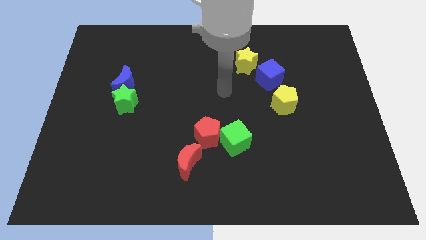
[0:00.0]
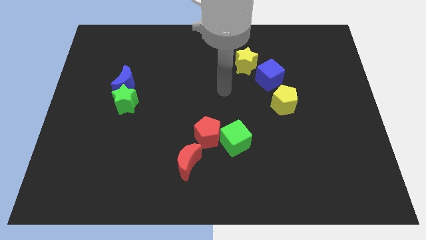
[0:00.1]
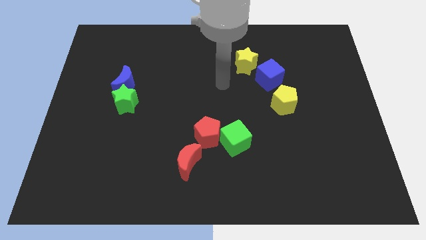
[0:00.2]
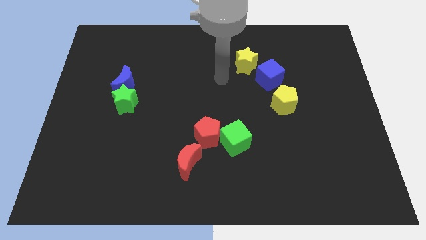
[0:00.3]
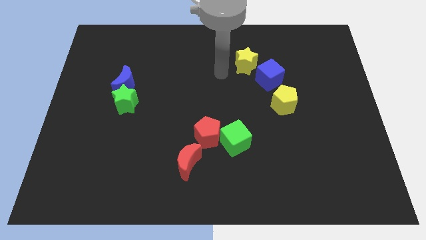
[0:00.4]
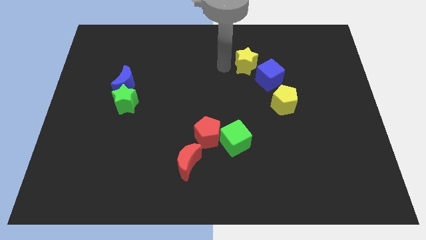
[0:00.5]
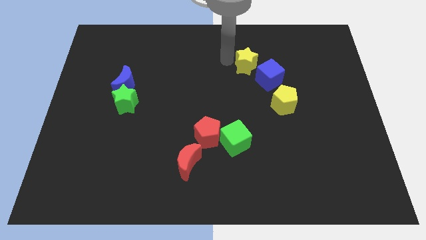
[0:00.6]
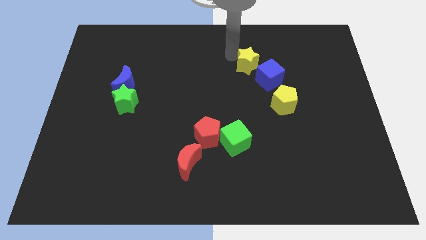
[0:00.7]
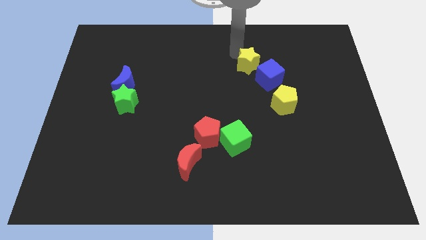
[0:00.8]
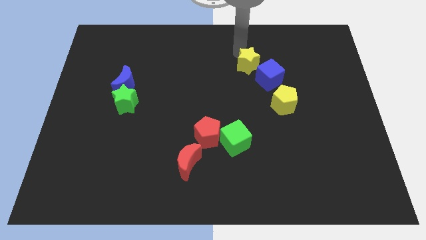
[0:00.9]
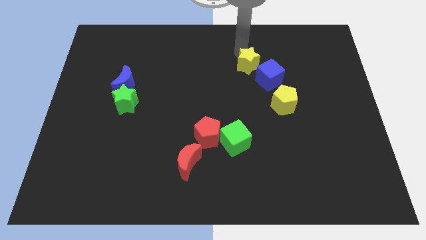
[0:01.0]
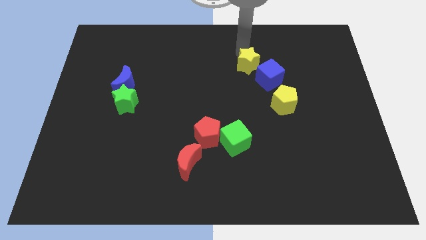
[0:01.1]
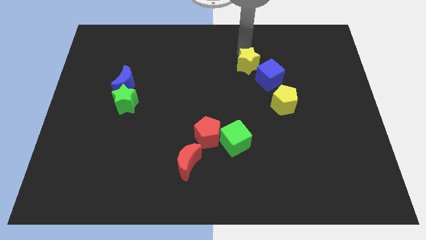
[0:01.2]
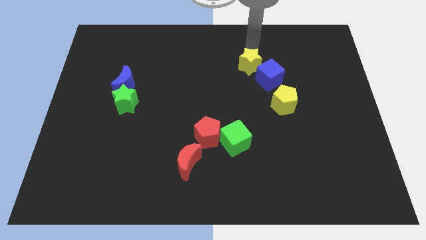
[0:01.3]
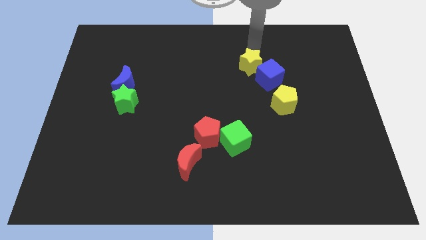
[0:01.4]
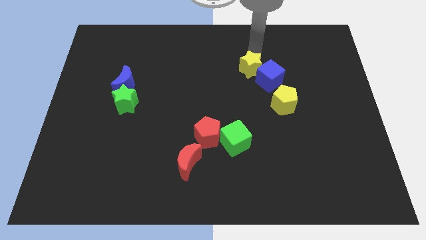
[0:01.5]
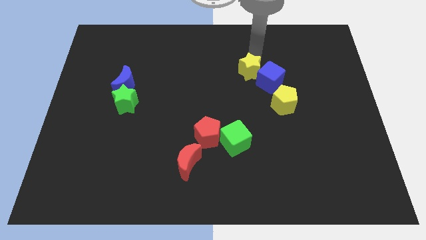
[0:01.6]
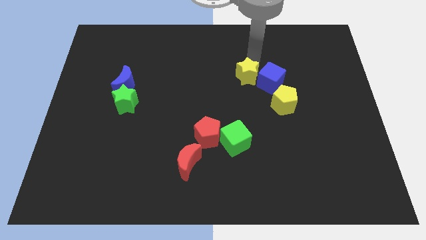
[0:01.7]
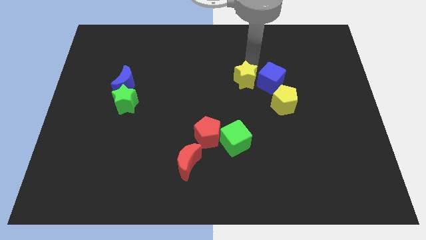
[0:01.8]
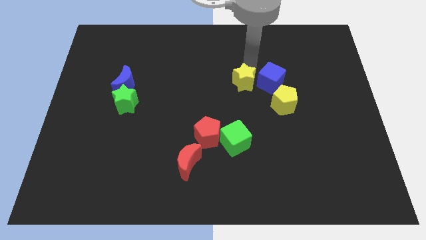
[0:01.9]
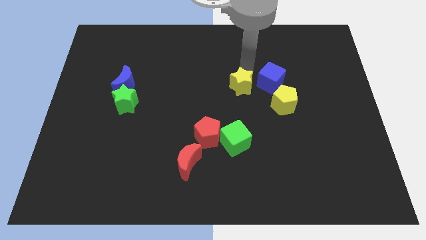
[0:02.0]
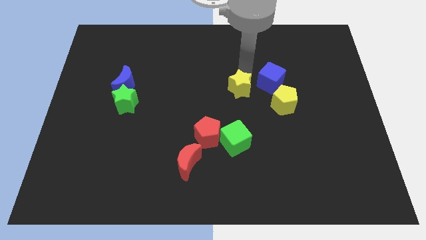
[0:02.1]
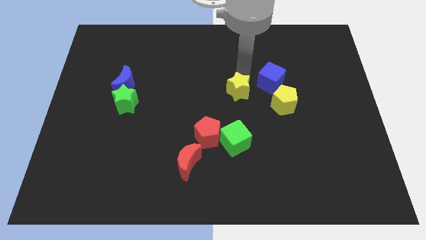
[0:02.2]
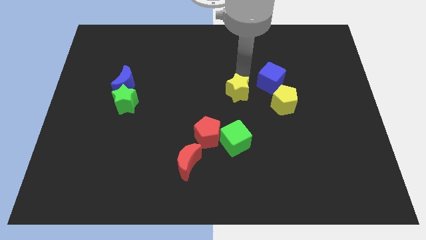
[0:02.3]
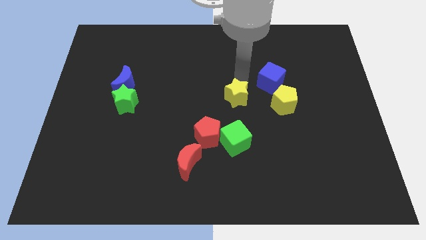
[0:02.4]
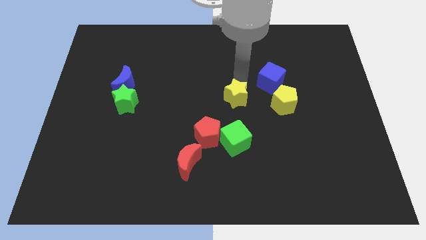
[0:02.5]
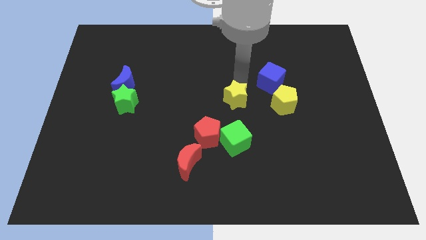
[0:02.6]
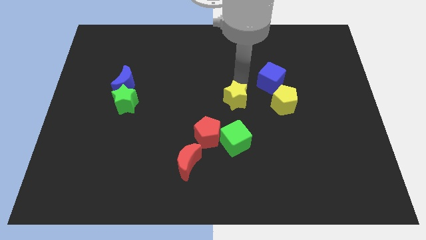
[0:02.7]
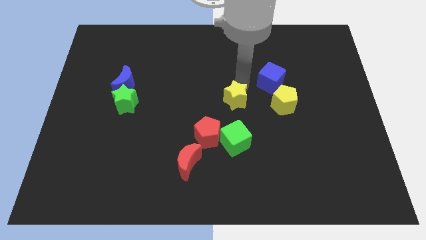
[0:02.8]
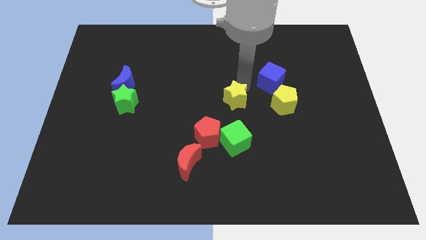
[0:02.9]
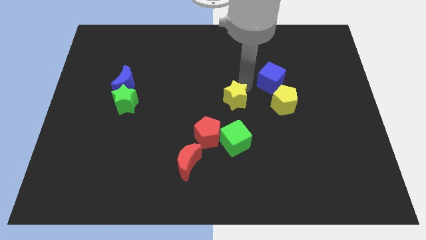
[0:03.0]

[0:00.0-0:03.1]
place the yellow star at the left side of the yellow pentagon

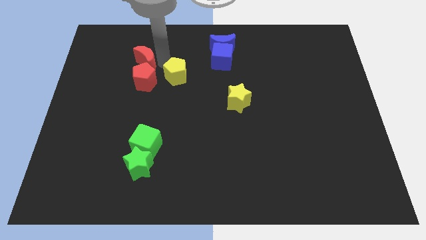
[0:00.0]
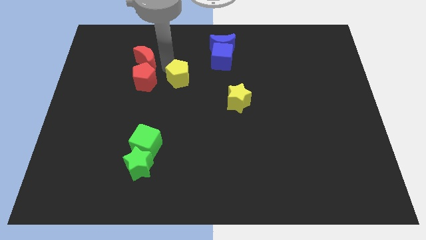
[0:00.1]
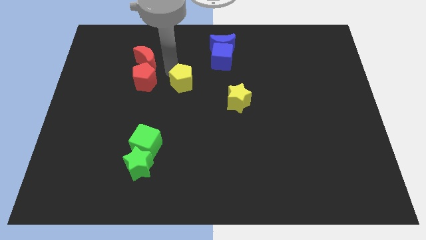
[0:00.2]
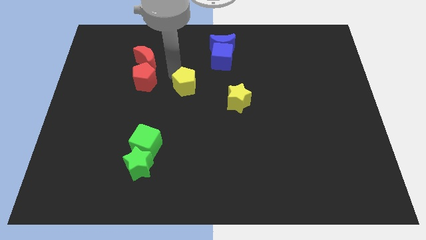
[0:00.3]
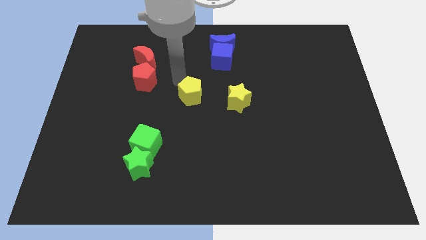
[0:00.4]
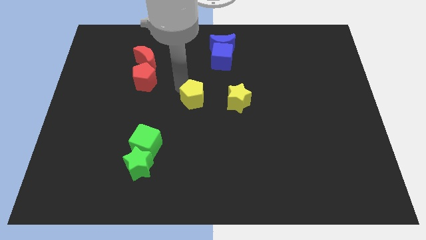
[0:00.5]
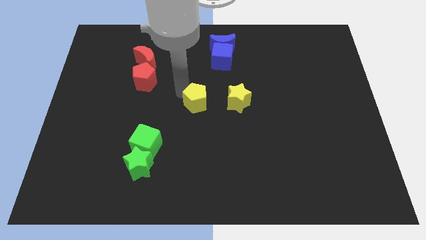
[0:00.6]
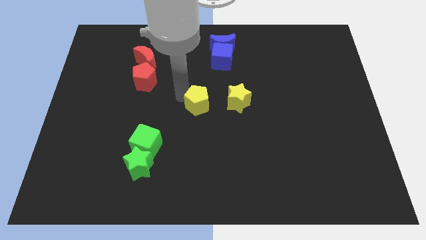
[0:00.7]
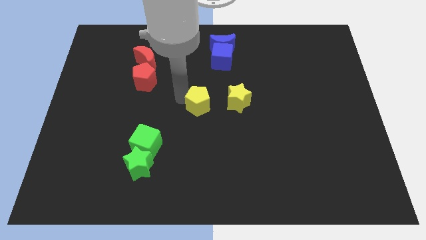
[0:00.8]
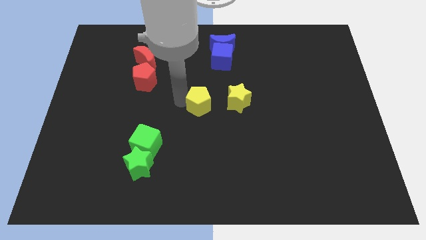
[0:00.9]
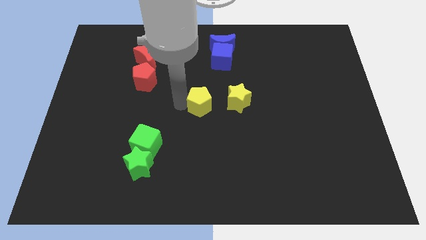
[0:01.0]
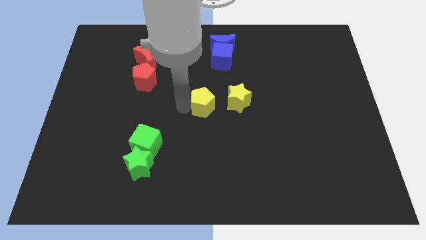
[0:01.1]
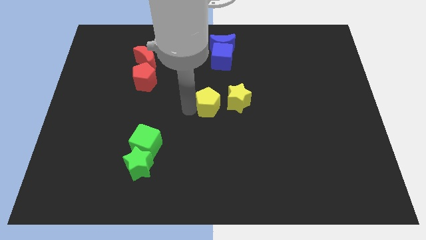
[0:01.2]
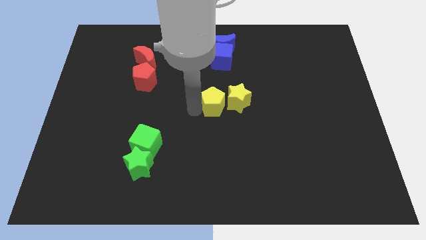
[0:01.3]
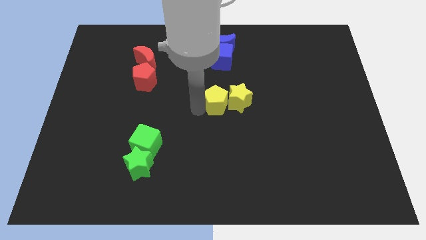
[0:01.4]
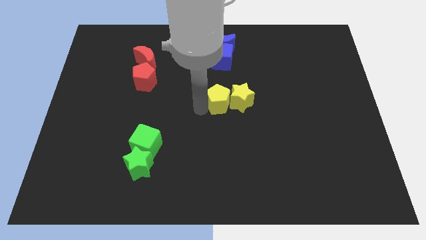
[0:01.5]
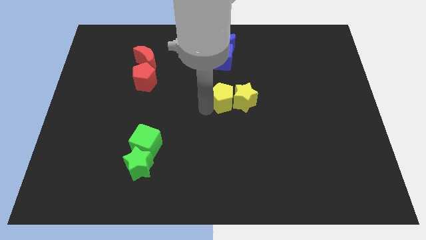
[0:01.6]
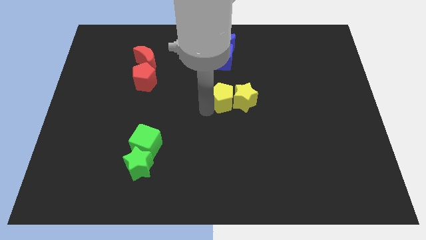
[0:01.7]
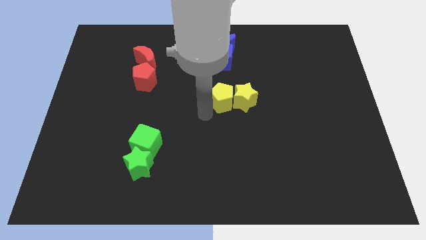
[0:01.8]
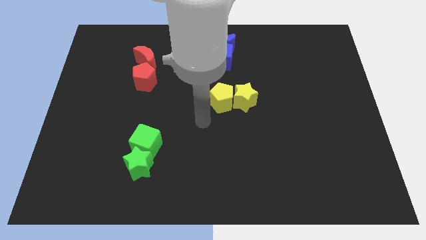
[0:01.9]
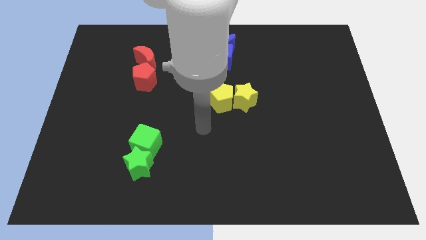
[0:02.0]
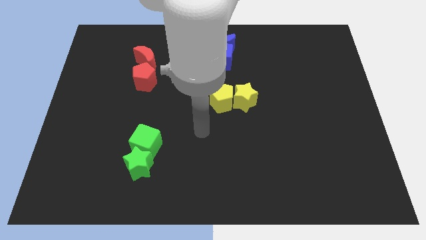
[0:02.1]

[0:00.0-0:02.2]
slide yellow pentagon into yellow star

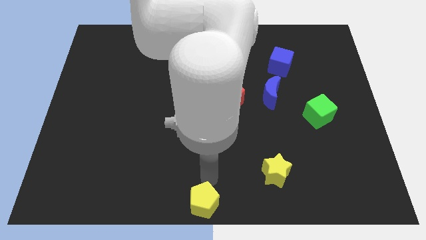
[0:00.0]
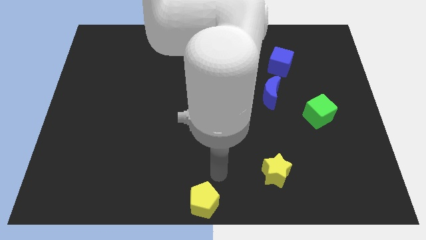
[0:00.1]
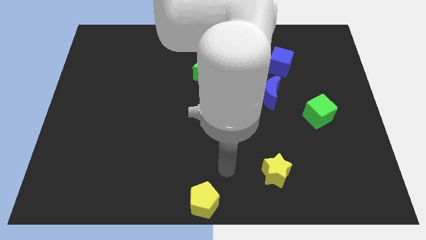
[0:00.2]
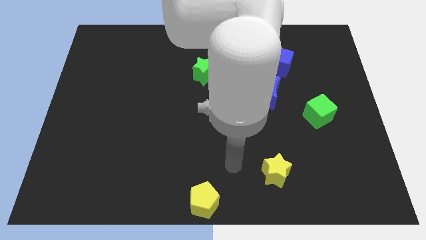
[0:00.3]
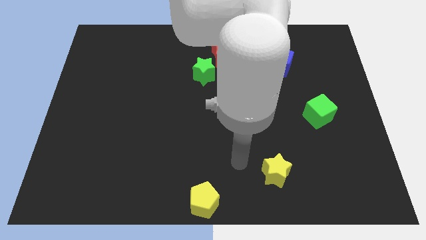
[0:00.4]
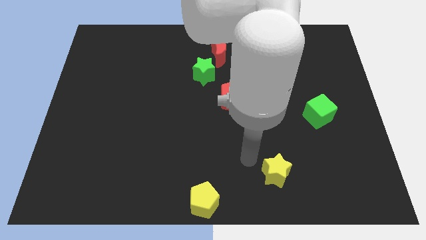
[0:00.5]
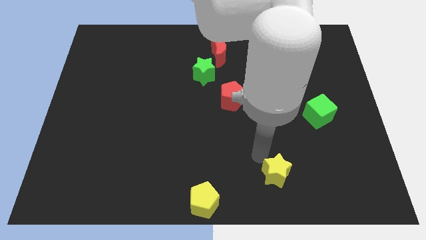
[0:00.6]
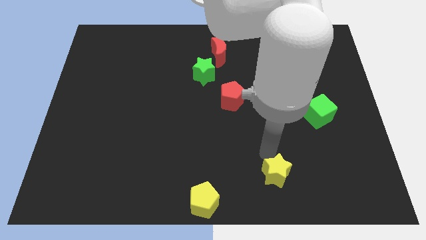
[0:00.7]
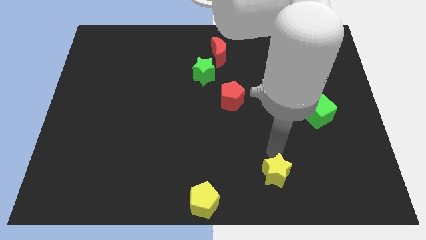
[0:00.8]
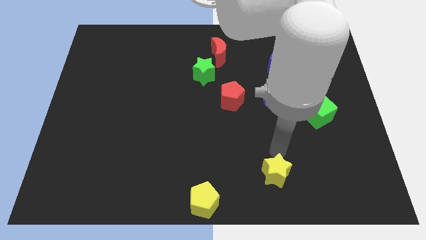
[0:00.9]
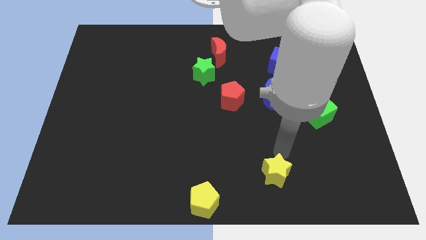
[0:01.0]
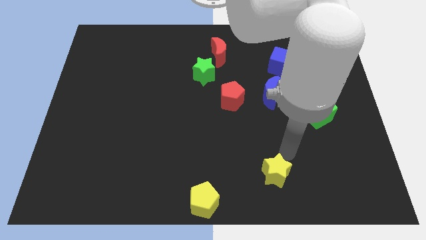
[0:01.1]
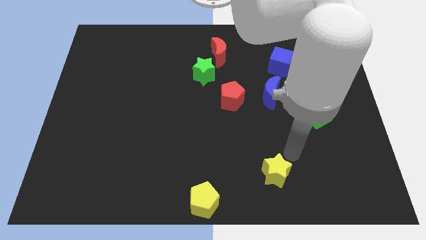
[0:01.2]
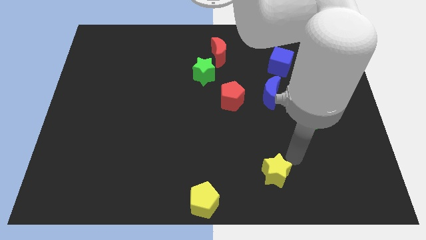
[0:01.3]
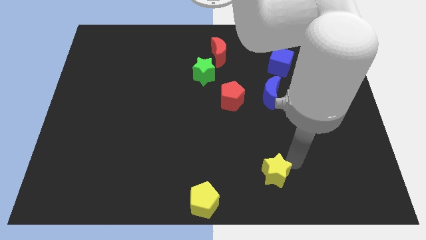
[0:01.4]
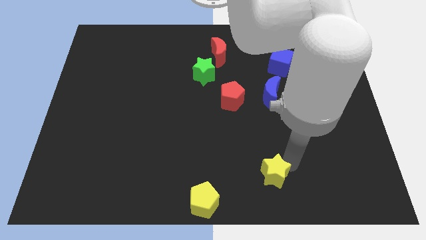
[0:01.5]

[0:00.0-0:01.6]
tap the yellow star

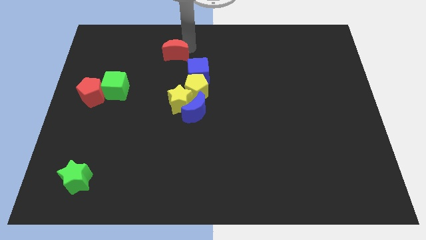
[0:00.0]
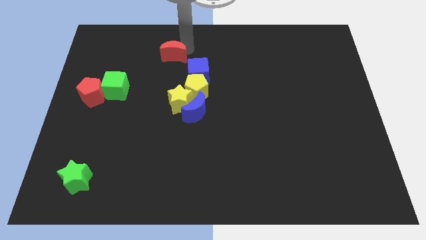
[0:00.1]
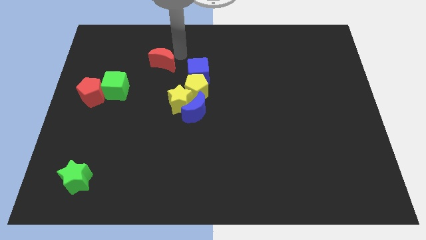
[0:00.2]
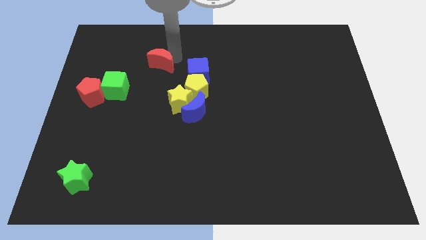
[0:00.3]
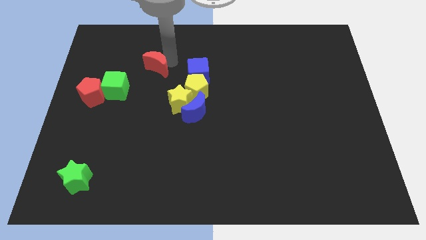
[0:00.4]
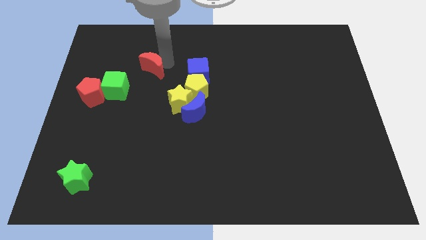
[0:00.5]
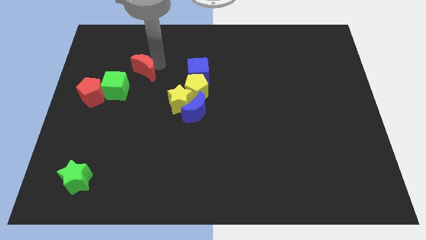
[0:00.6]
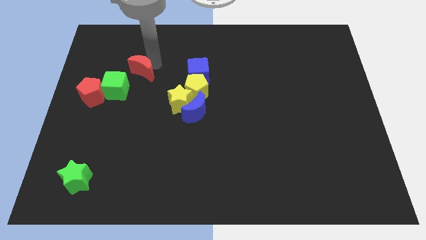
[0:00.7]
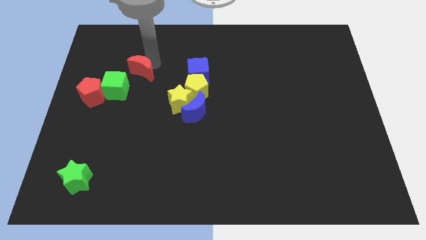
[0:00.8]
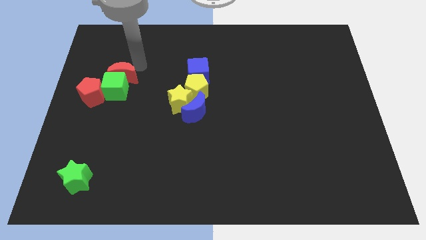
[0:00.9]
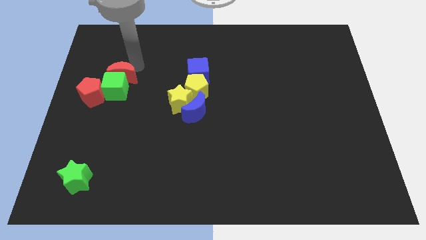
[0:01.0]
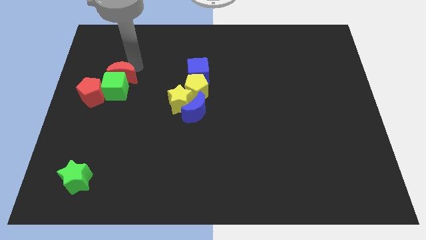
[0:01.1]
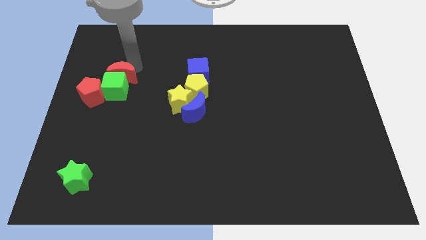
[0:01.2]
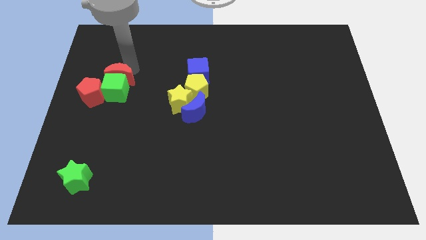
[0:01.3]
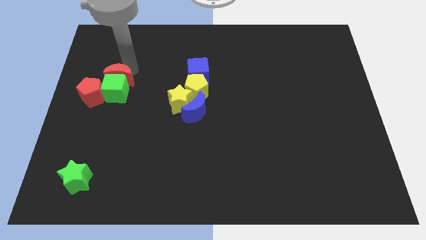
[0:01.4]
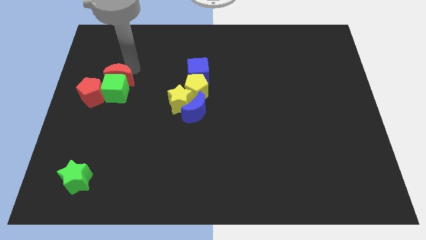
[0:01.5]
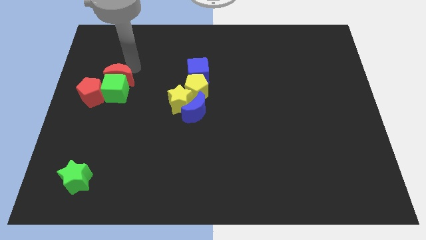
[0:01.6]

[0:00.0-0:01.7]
move the red moon into the green cube

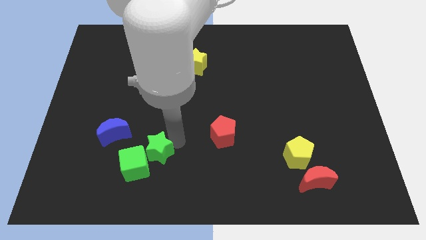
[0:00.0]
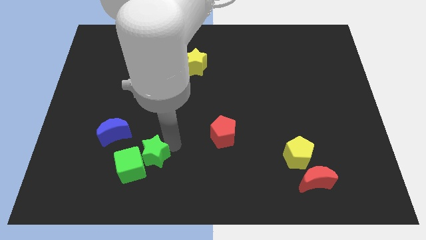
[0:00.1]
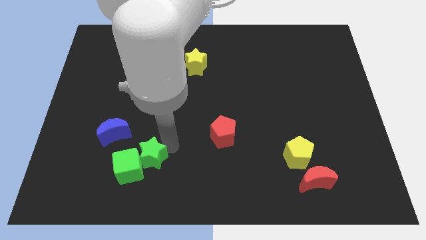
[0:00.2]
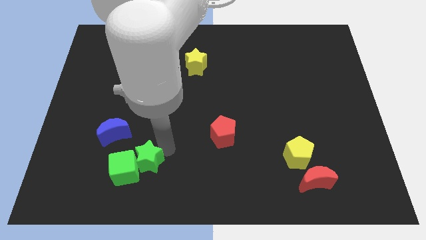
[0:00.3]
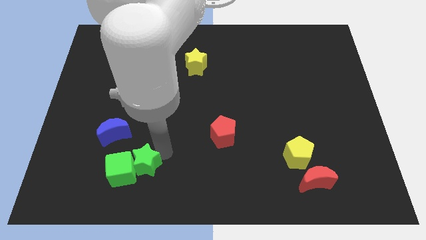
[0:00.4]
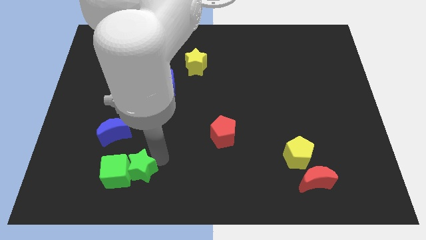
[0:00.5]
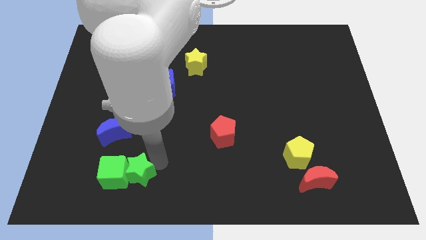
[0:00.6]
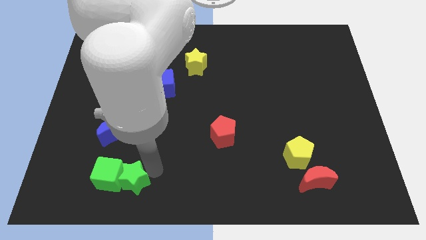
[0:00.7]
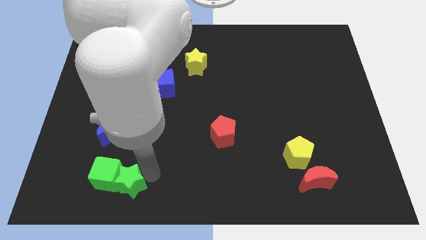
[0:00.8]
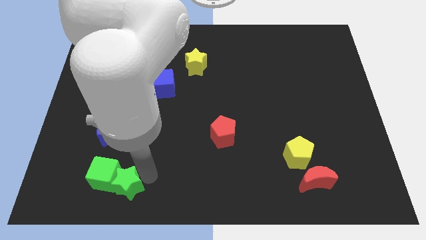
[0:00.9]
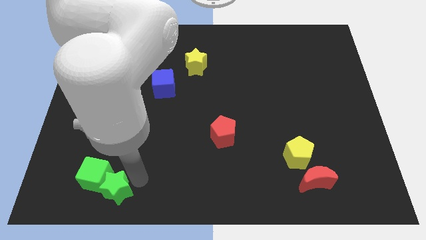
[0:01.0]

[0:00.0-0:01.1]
push the green blocks slightly to the left
